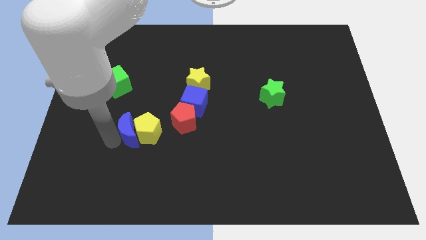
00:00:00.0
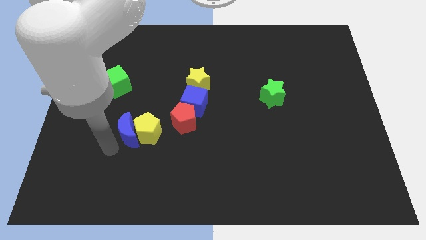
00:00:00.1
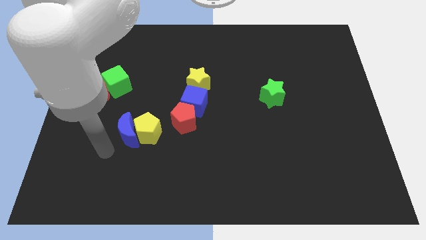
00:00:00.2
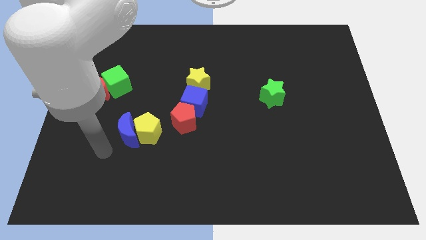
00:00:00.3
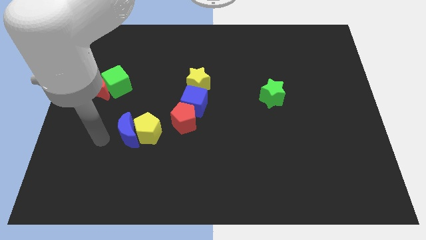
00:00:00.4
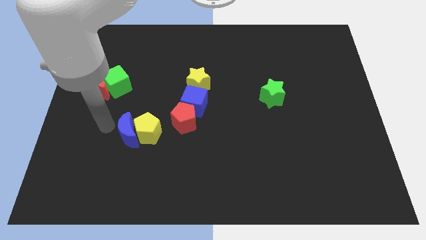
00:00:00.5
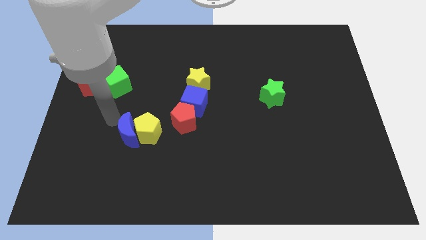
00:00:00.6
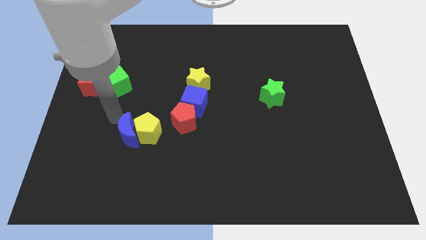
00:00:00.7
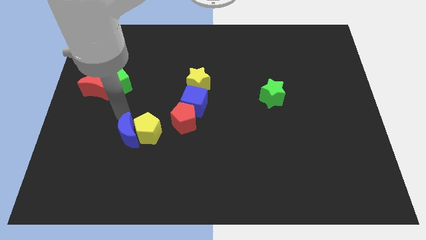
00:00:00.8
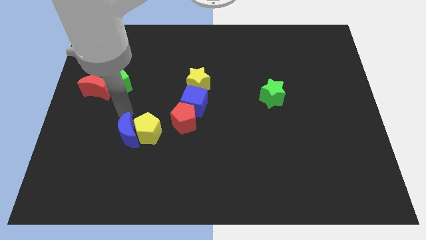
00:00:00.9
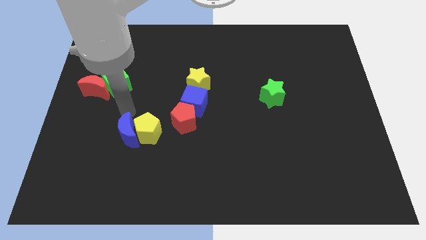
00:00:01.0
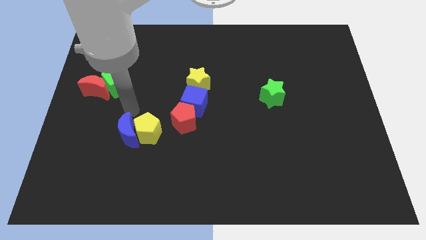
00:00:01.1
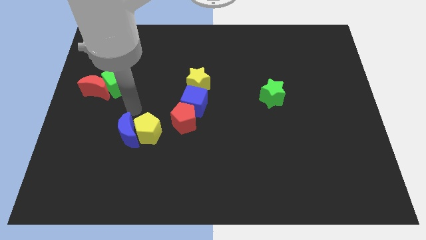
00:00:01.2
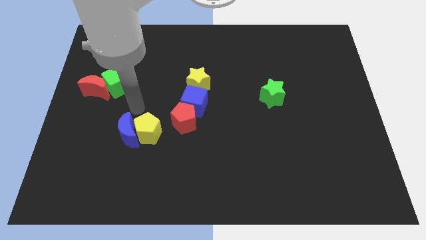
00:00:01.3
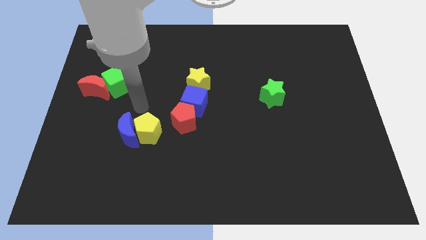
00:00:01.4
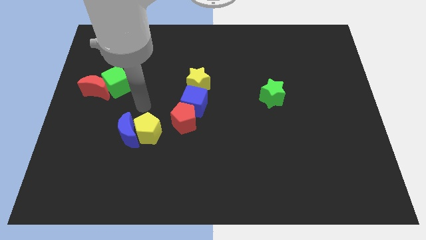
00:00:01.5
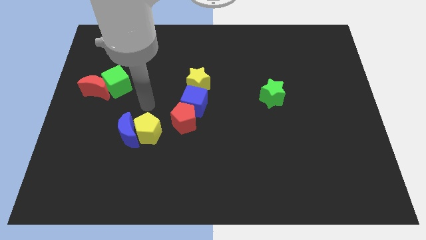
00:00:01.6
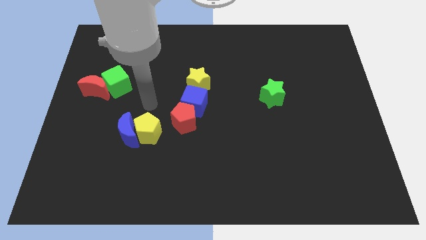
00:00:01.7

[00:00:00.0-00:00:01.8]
move your arm away from the blue crescent

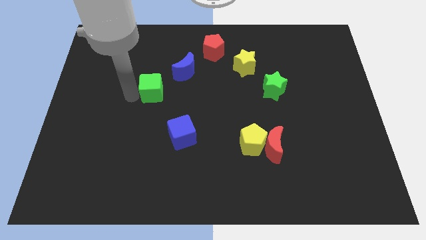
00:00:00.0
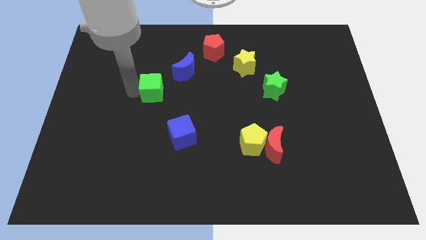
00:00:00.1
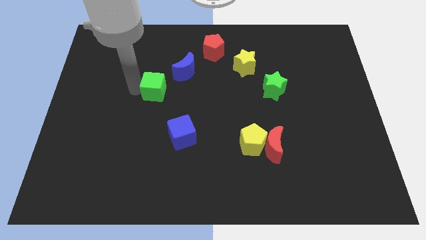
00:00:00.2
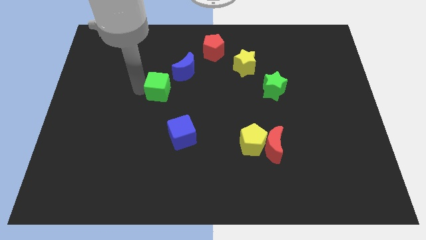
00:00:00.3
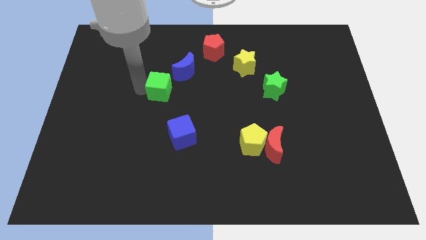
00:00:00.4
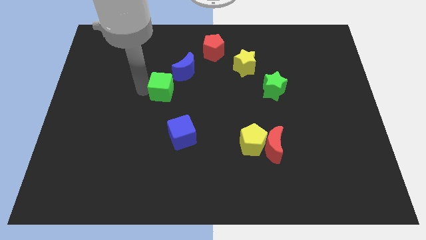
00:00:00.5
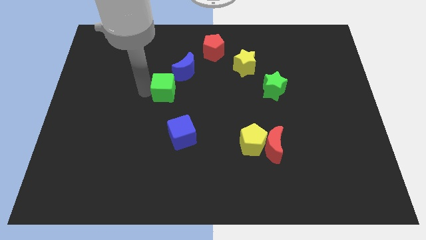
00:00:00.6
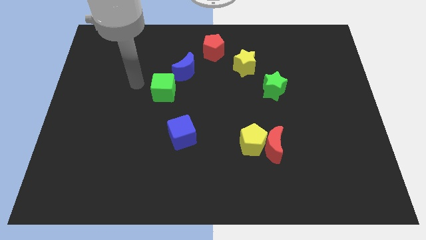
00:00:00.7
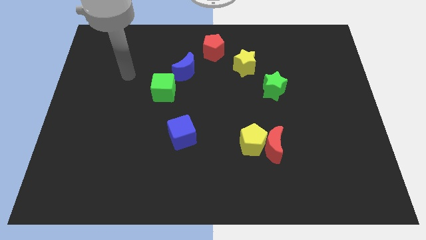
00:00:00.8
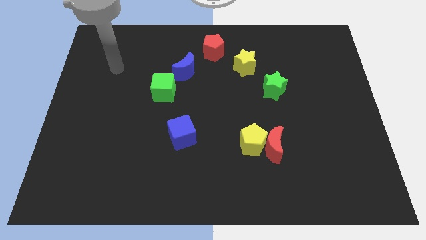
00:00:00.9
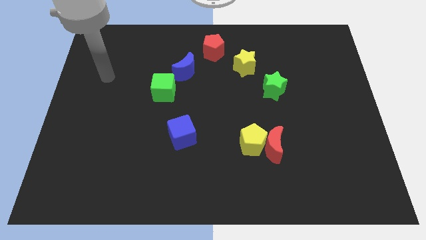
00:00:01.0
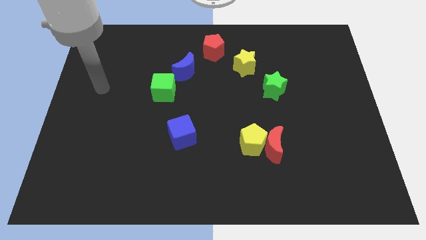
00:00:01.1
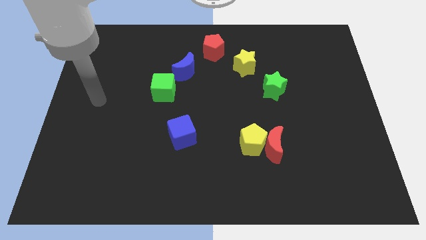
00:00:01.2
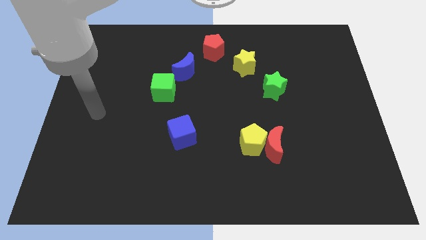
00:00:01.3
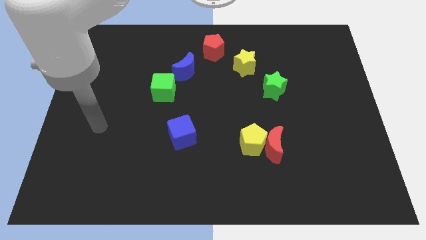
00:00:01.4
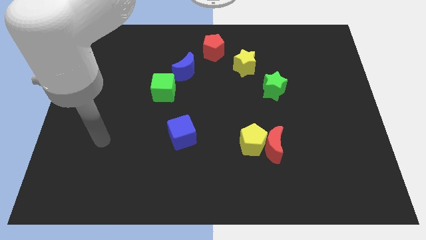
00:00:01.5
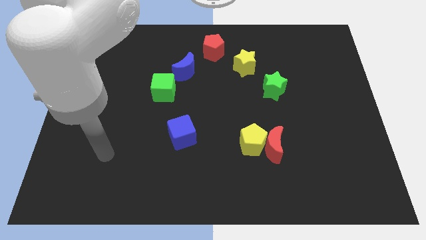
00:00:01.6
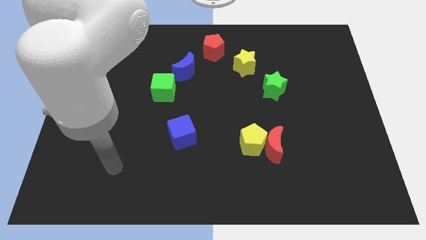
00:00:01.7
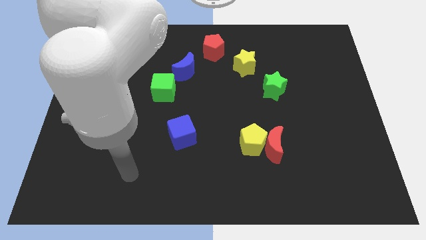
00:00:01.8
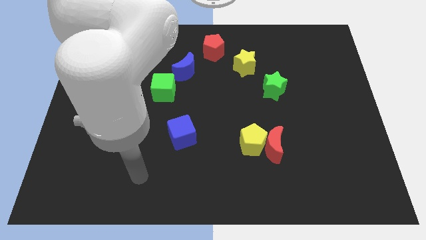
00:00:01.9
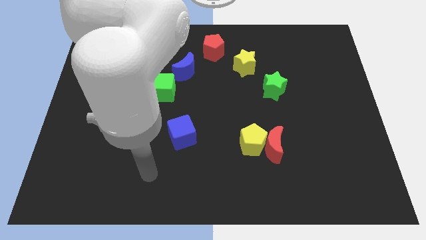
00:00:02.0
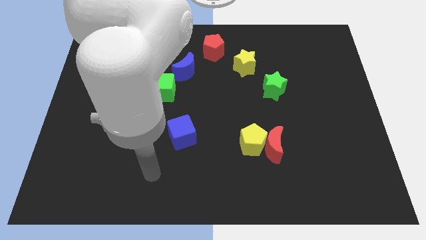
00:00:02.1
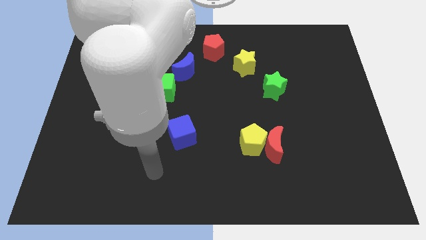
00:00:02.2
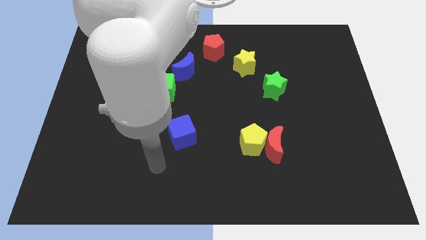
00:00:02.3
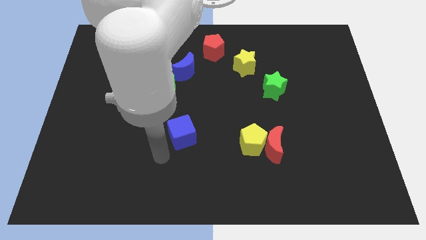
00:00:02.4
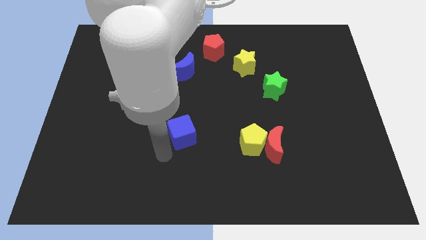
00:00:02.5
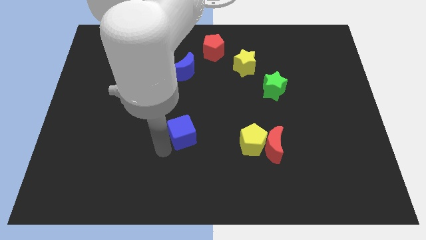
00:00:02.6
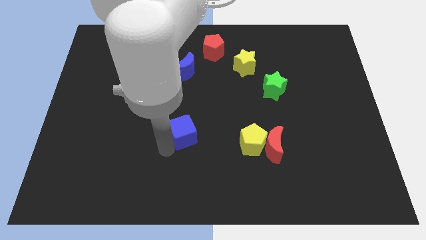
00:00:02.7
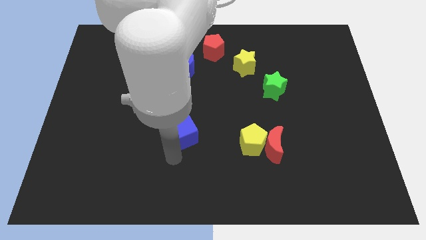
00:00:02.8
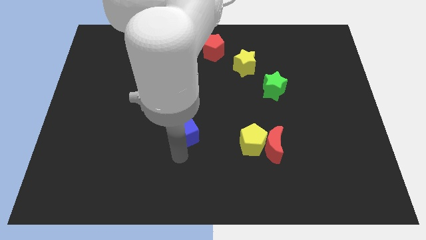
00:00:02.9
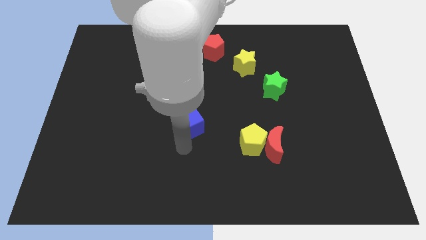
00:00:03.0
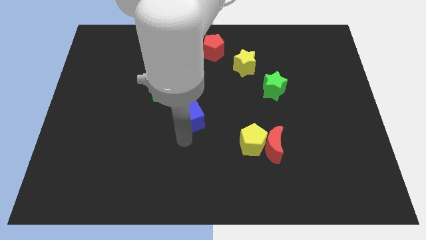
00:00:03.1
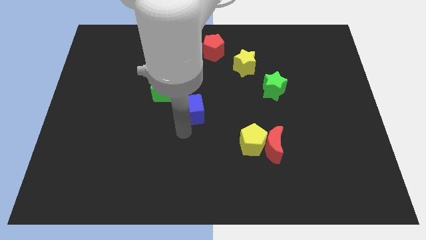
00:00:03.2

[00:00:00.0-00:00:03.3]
push the blue cube diagonally towards the bottom right of the green cube

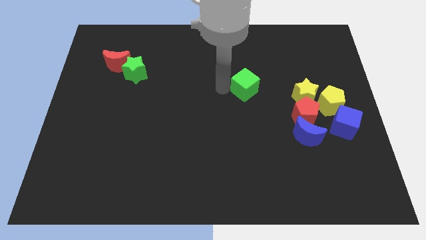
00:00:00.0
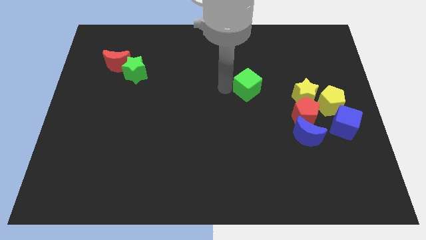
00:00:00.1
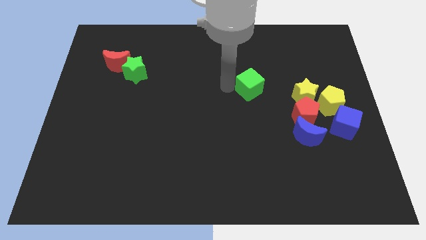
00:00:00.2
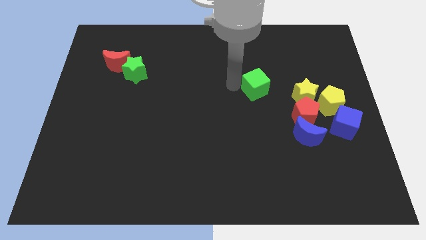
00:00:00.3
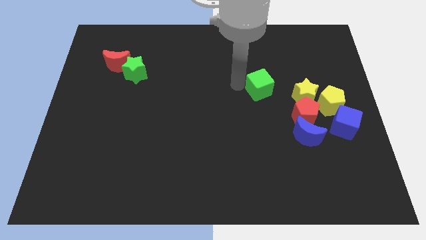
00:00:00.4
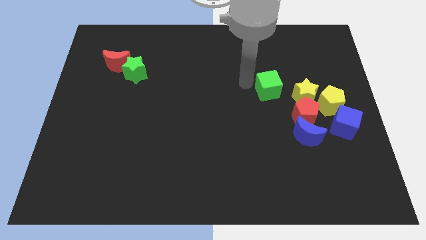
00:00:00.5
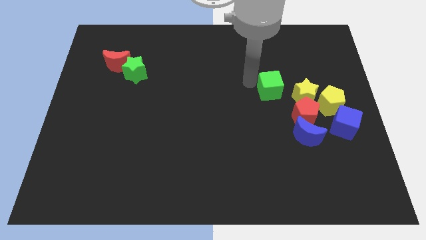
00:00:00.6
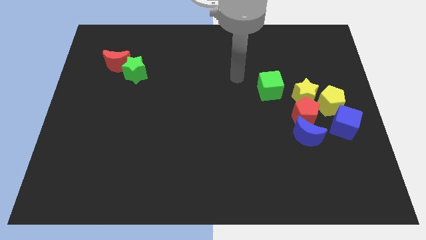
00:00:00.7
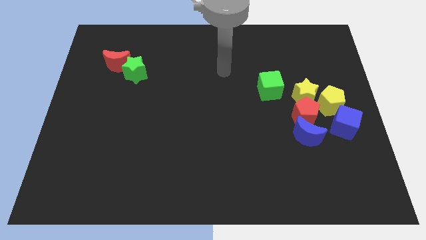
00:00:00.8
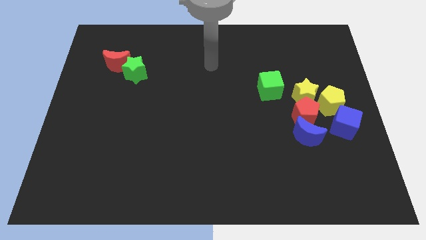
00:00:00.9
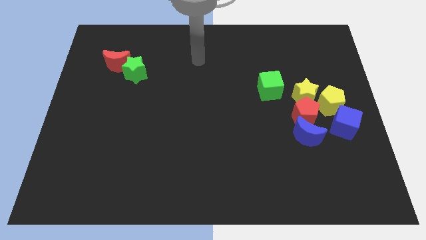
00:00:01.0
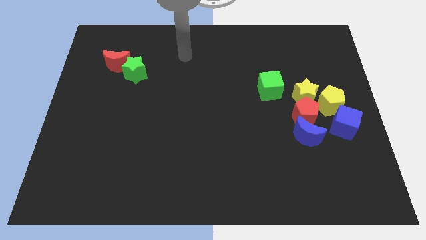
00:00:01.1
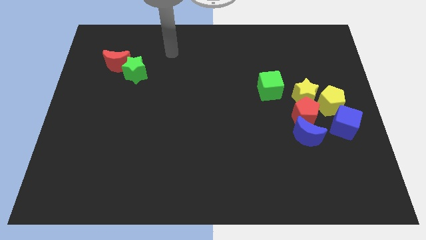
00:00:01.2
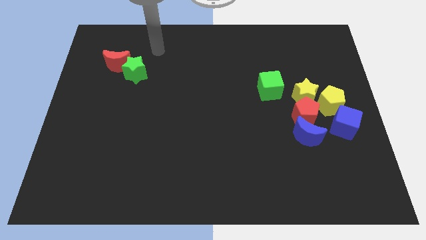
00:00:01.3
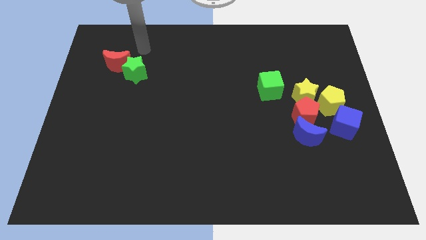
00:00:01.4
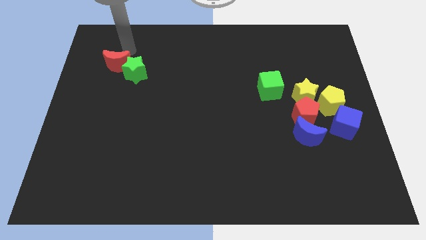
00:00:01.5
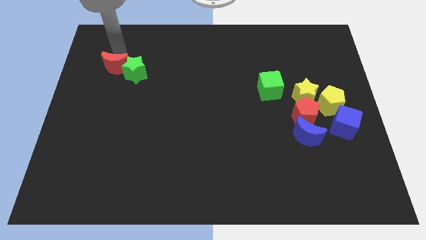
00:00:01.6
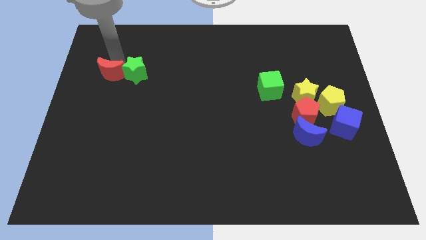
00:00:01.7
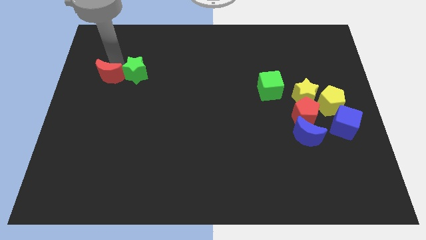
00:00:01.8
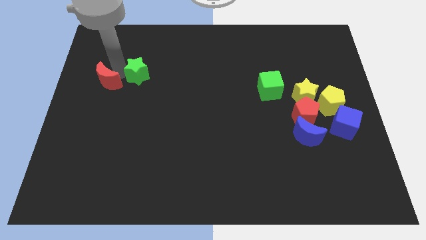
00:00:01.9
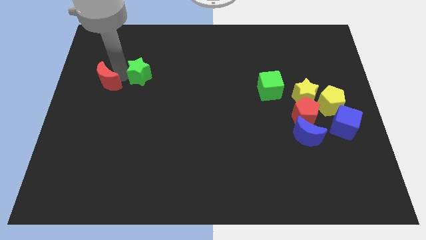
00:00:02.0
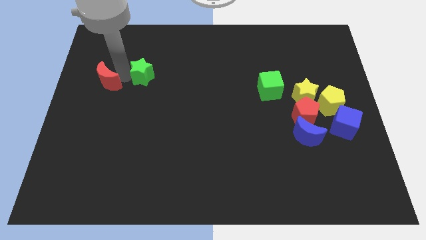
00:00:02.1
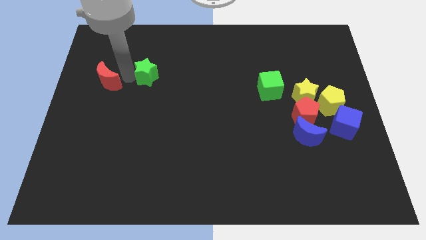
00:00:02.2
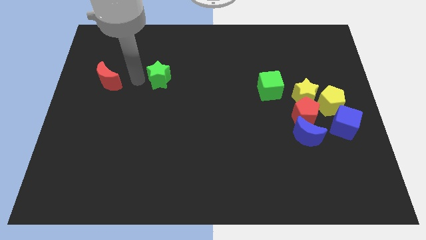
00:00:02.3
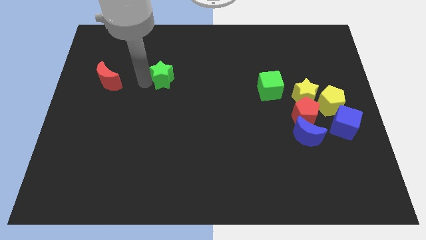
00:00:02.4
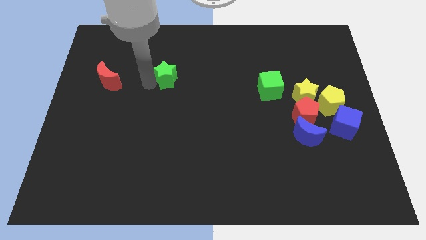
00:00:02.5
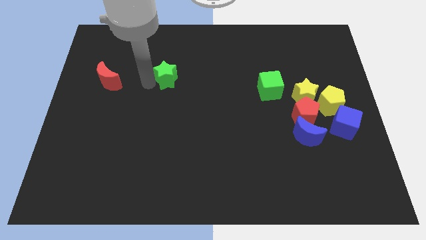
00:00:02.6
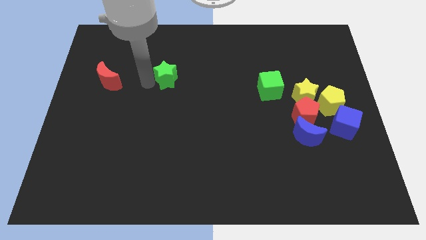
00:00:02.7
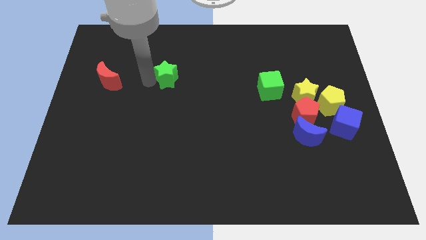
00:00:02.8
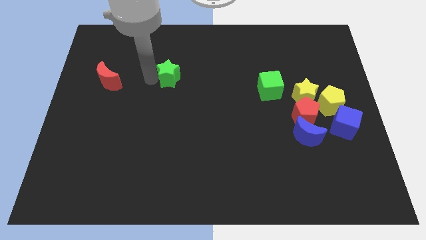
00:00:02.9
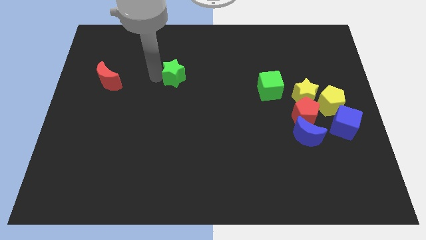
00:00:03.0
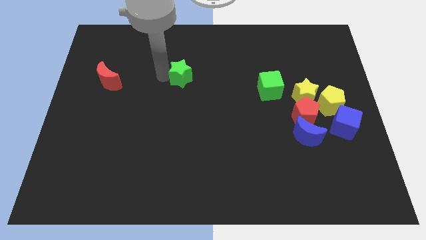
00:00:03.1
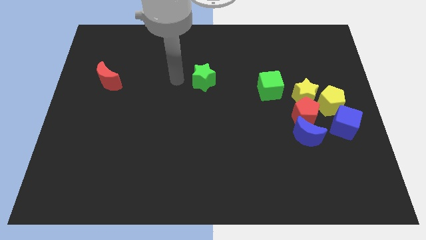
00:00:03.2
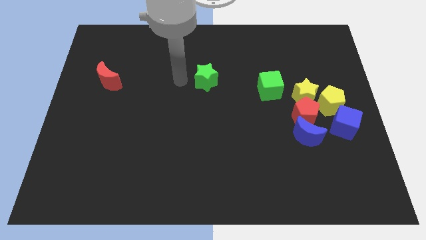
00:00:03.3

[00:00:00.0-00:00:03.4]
place green star parallel to the left of the green cube

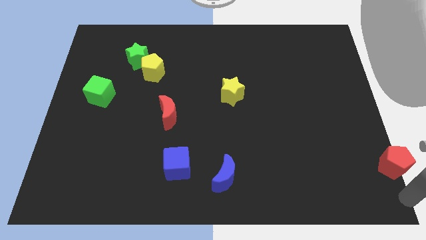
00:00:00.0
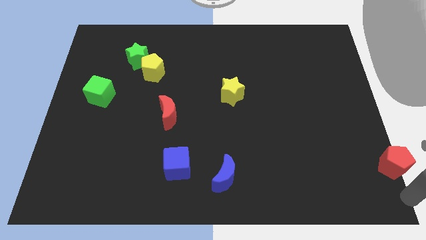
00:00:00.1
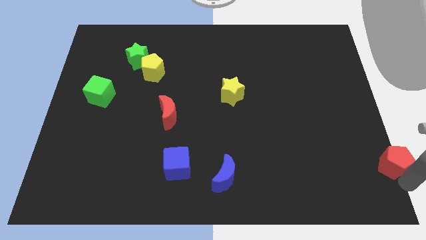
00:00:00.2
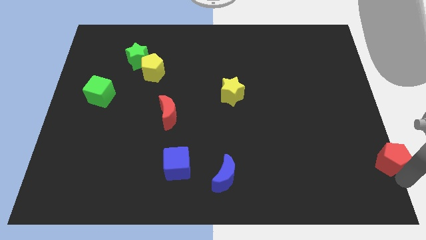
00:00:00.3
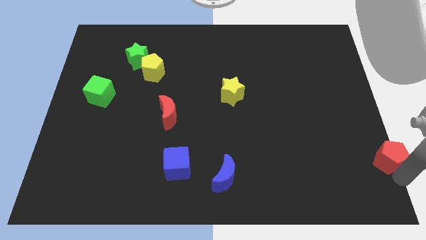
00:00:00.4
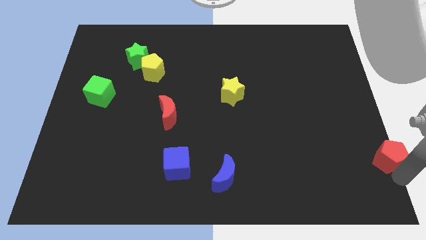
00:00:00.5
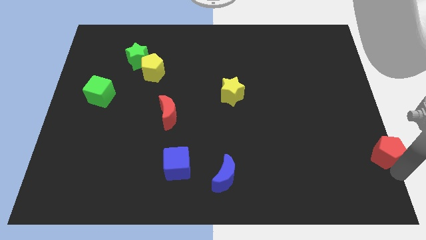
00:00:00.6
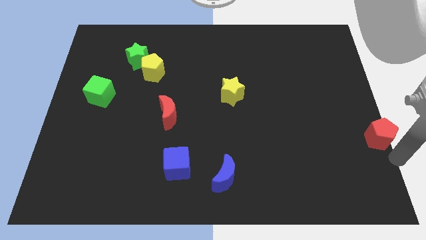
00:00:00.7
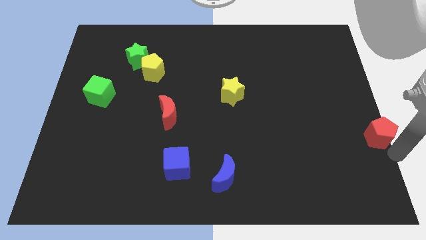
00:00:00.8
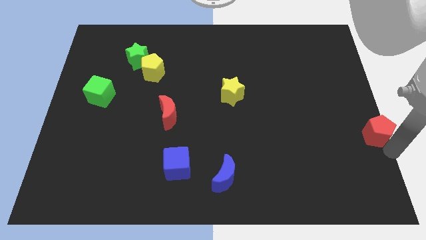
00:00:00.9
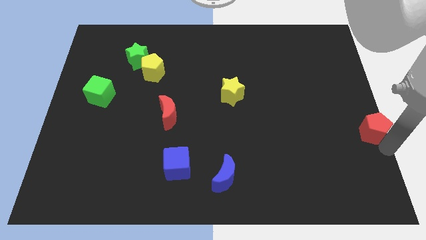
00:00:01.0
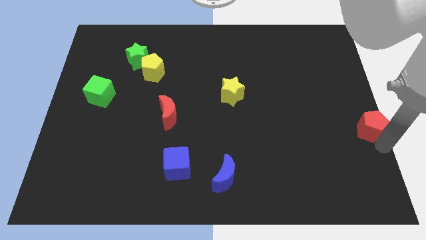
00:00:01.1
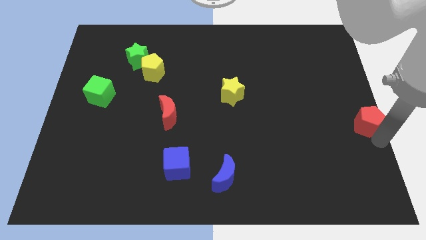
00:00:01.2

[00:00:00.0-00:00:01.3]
move the red pentagon to the center right of the board
